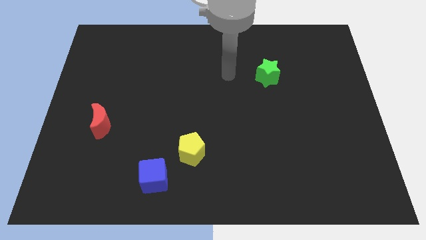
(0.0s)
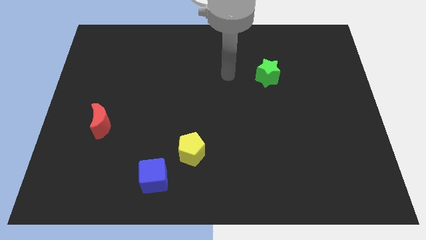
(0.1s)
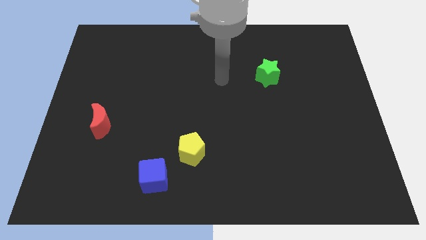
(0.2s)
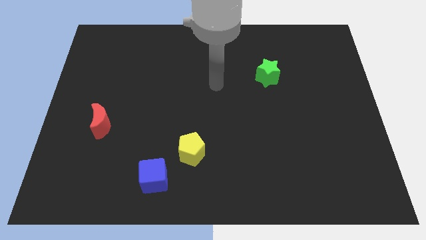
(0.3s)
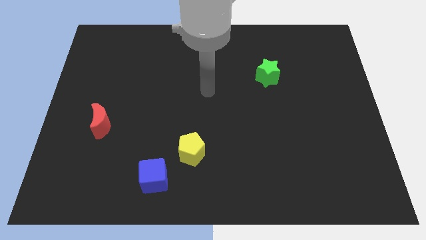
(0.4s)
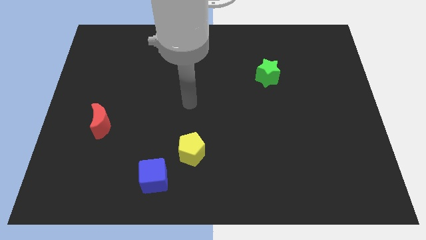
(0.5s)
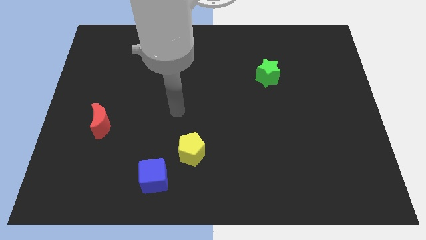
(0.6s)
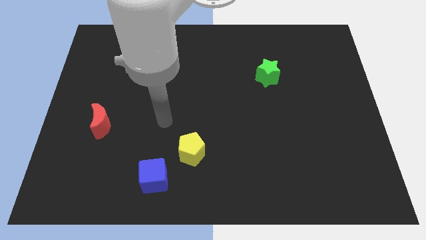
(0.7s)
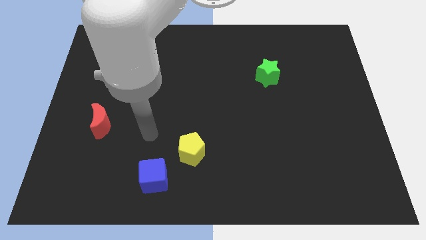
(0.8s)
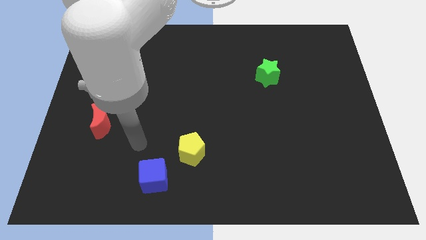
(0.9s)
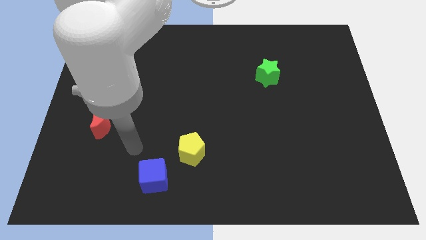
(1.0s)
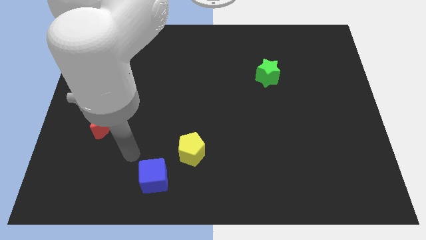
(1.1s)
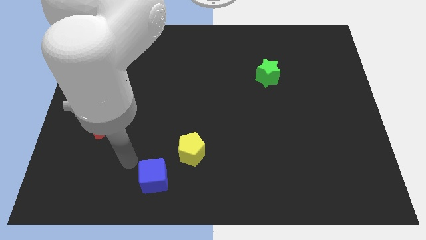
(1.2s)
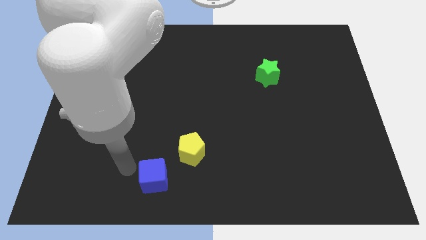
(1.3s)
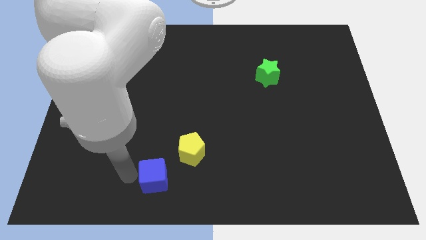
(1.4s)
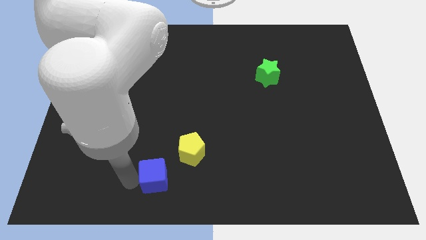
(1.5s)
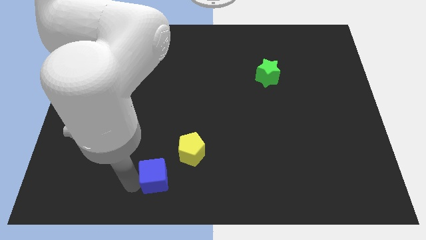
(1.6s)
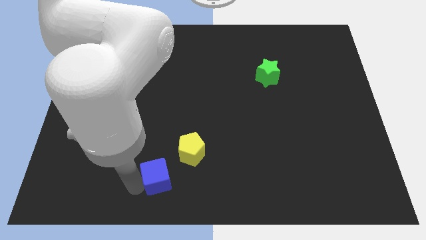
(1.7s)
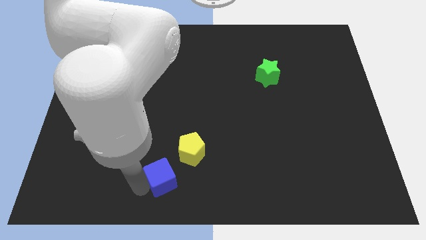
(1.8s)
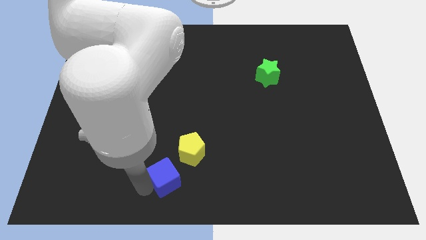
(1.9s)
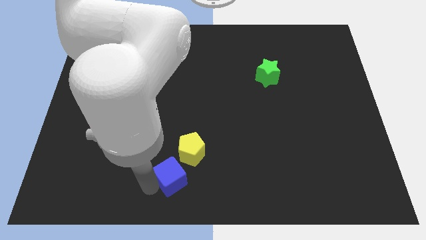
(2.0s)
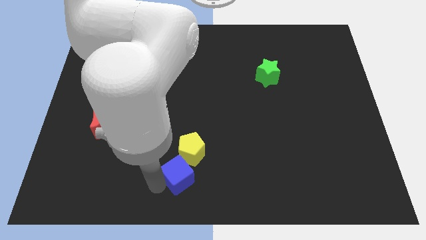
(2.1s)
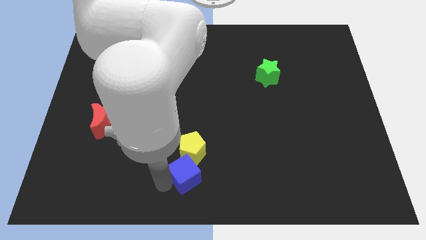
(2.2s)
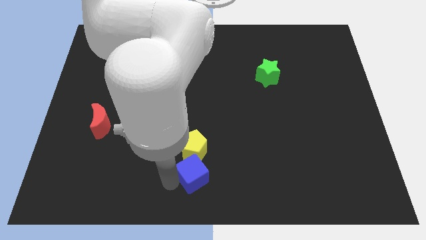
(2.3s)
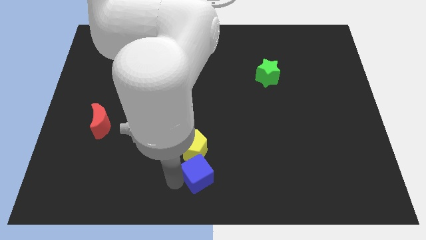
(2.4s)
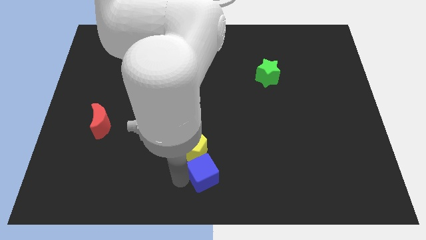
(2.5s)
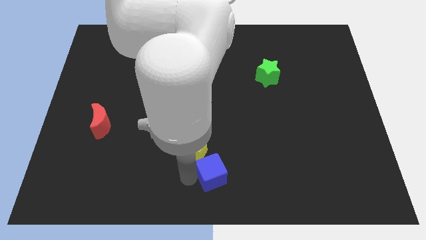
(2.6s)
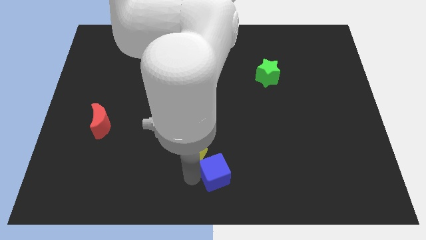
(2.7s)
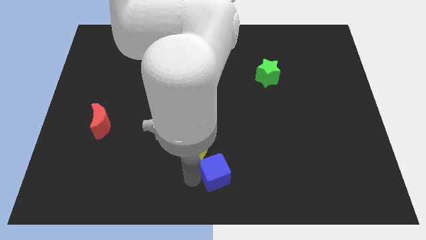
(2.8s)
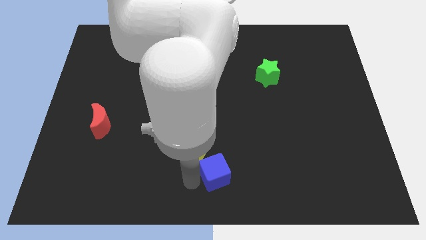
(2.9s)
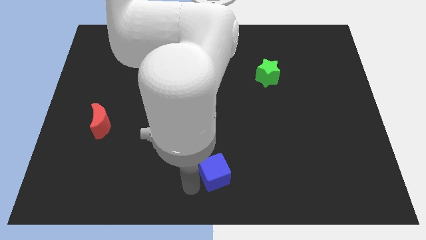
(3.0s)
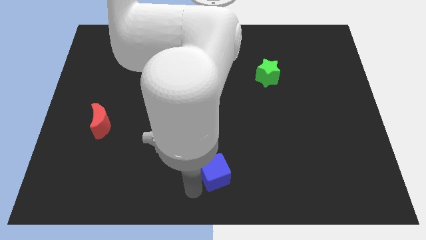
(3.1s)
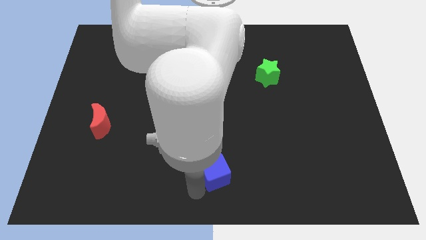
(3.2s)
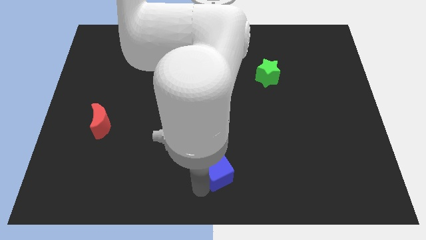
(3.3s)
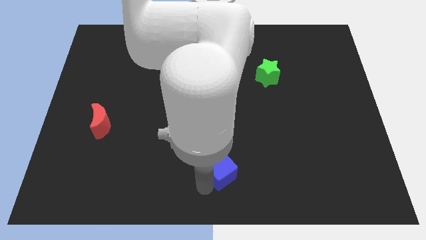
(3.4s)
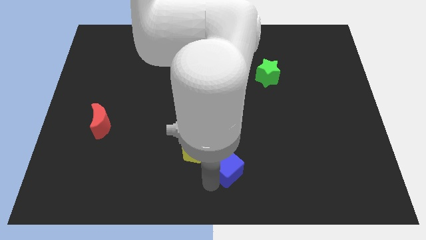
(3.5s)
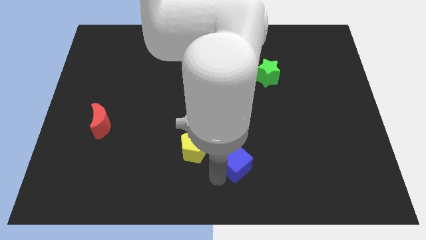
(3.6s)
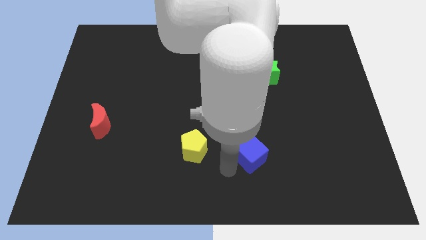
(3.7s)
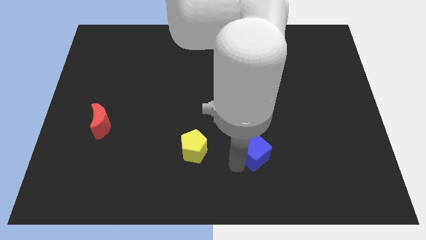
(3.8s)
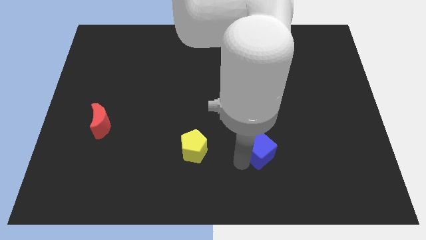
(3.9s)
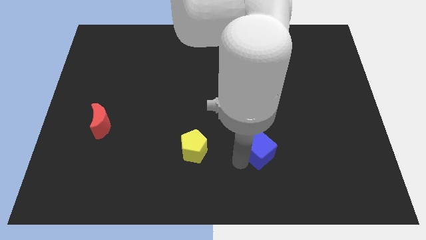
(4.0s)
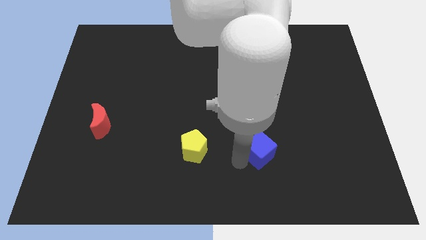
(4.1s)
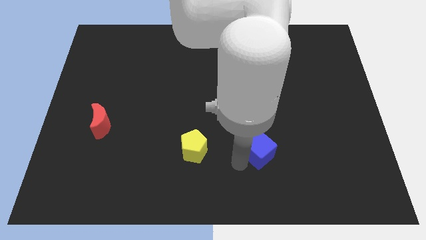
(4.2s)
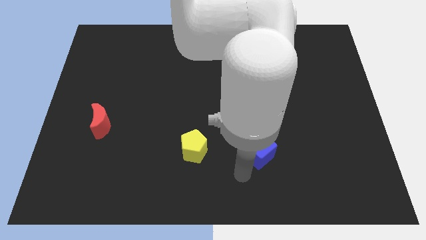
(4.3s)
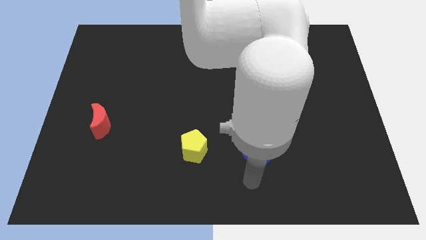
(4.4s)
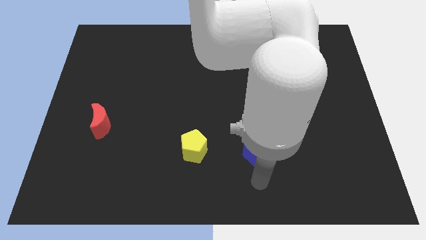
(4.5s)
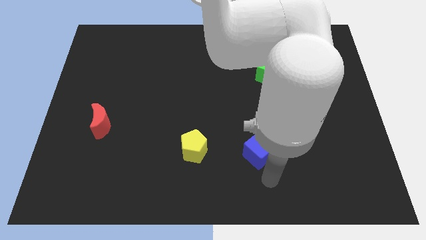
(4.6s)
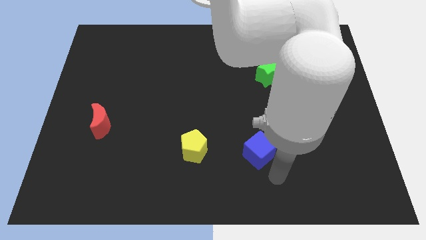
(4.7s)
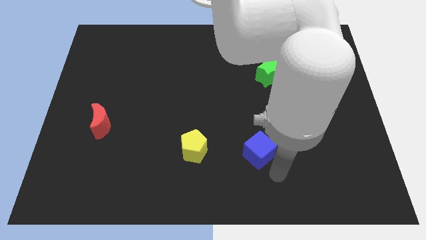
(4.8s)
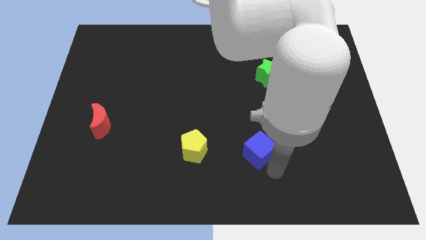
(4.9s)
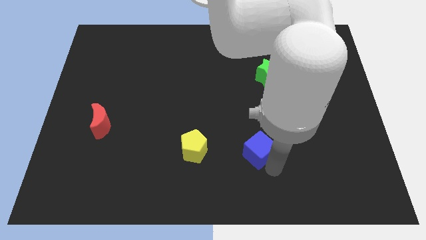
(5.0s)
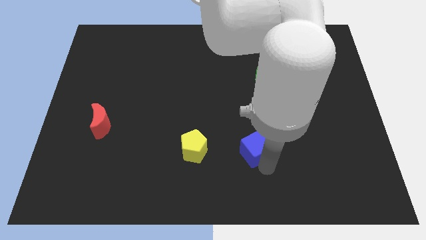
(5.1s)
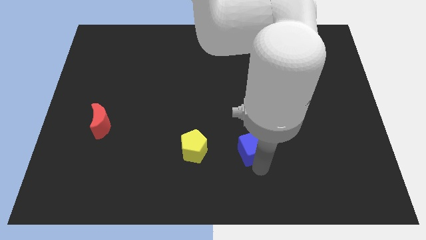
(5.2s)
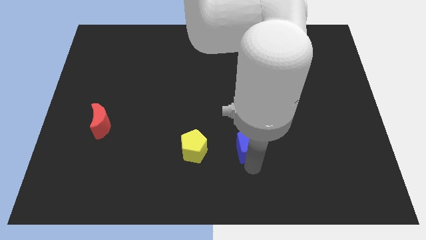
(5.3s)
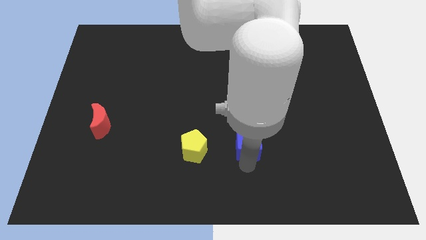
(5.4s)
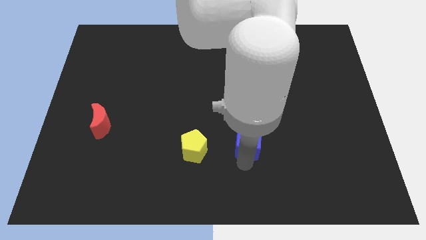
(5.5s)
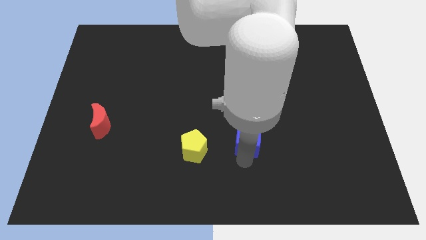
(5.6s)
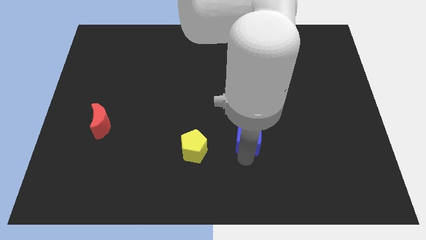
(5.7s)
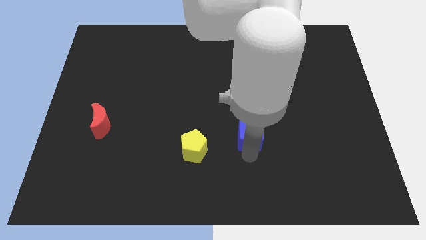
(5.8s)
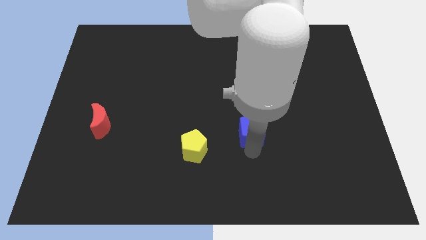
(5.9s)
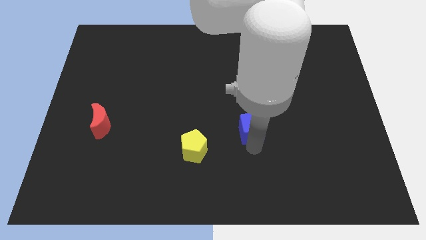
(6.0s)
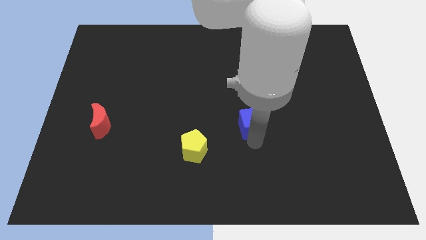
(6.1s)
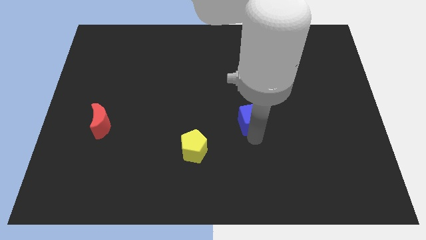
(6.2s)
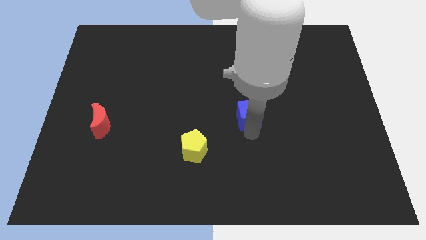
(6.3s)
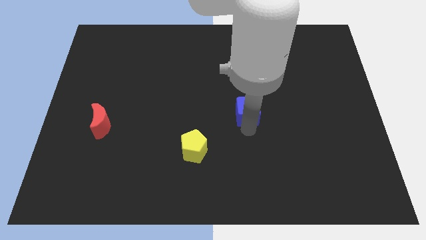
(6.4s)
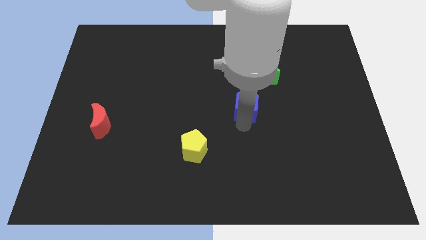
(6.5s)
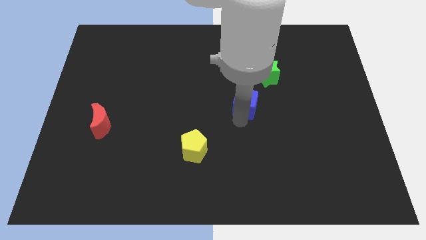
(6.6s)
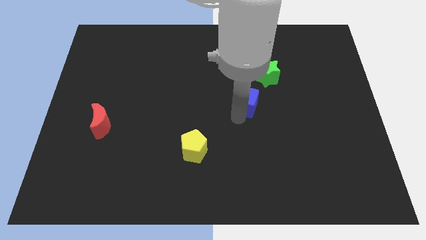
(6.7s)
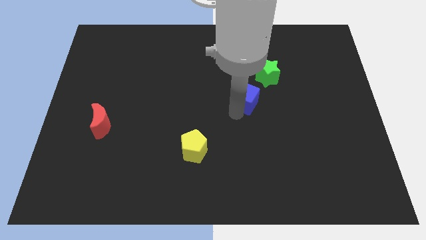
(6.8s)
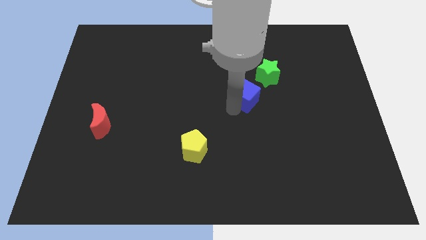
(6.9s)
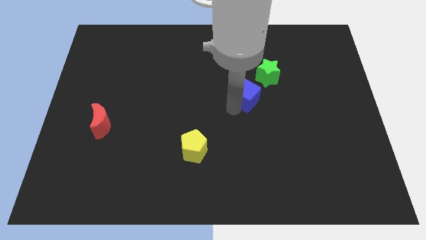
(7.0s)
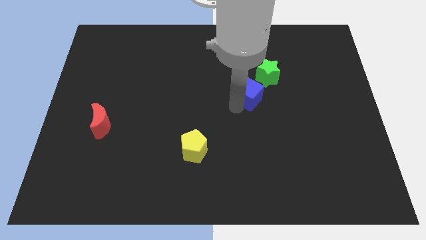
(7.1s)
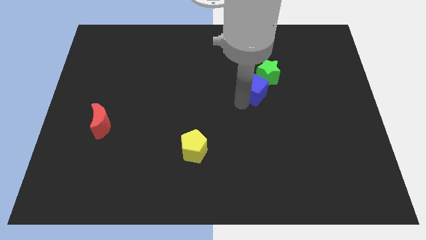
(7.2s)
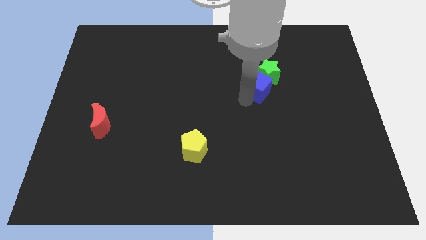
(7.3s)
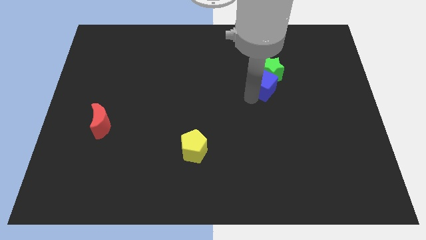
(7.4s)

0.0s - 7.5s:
move the cube close to the green star

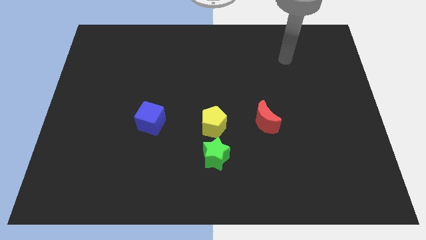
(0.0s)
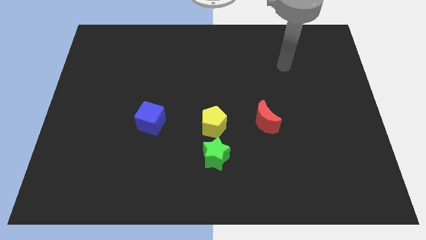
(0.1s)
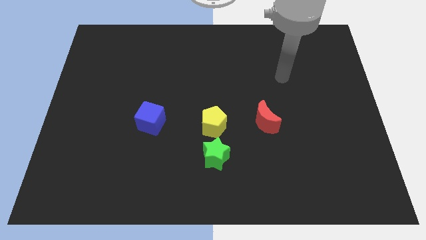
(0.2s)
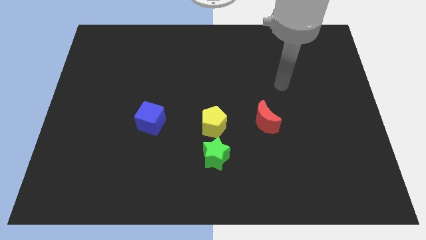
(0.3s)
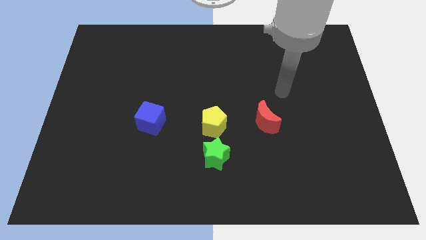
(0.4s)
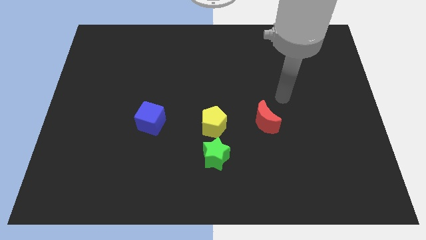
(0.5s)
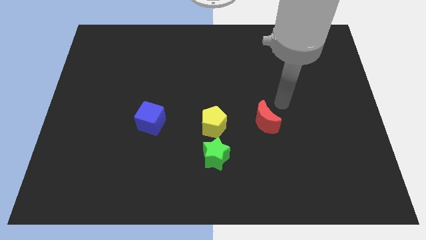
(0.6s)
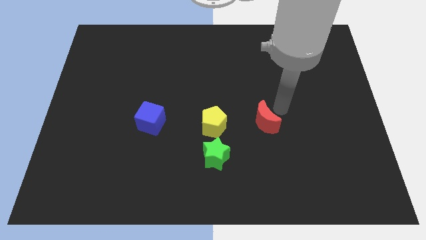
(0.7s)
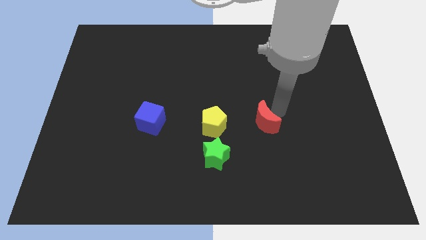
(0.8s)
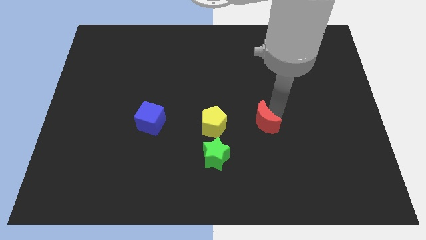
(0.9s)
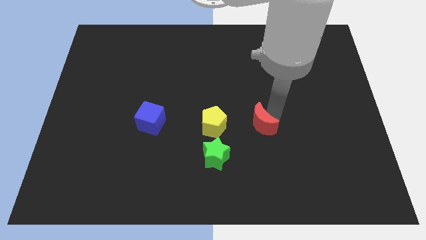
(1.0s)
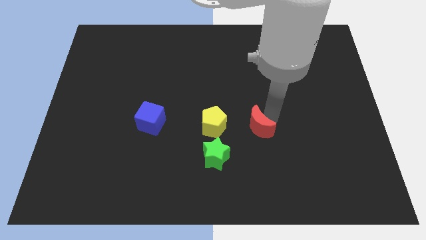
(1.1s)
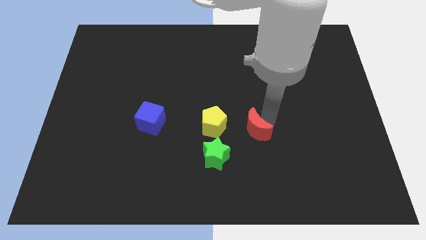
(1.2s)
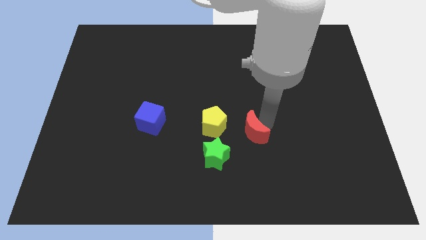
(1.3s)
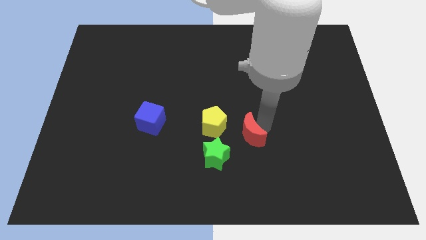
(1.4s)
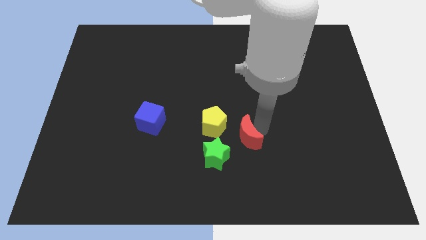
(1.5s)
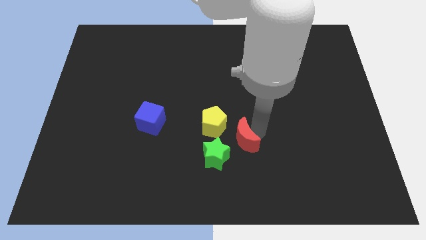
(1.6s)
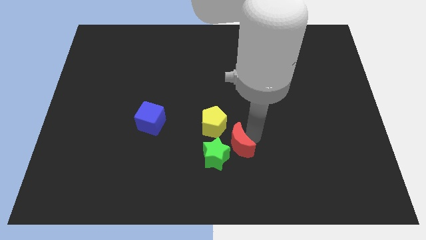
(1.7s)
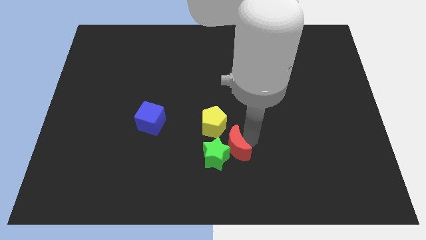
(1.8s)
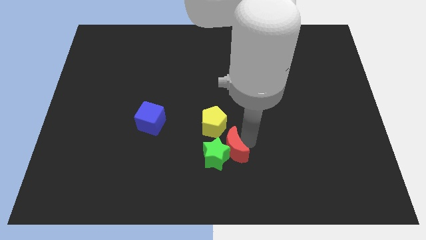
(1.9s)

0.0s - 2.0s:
move the red moon close to the star
